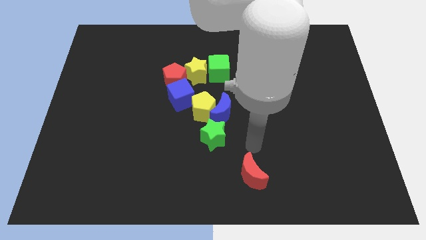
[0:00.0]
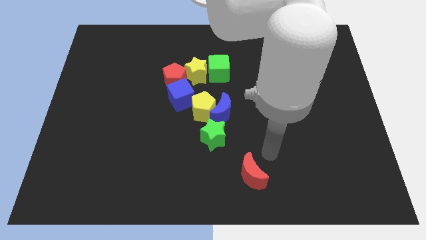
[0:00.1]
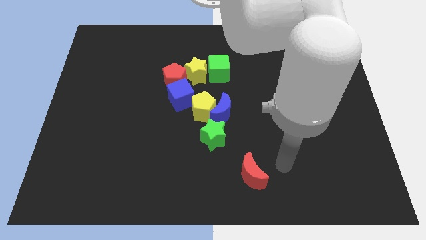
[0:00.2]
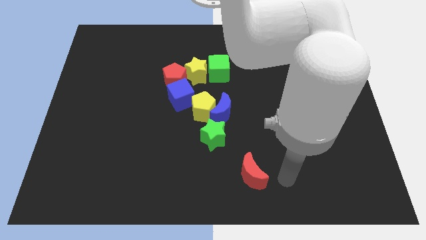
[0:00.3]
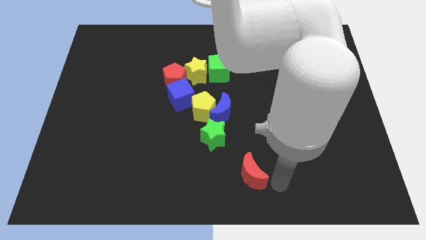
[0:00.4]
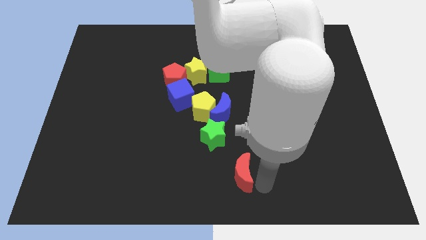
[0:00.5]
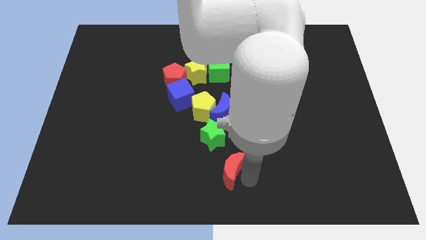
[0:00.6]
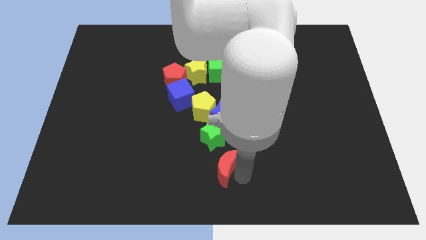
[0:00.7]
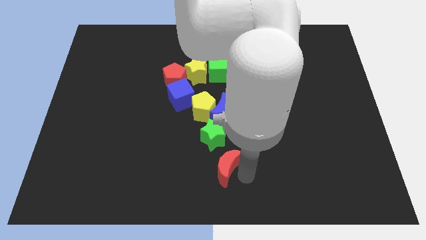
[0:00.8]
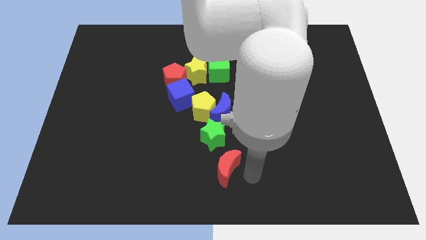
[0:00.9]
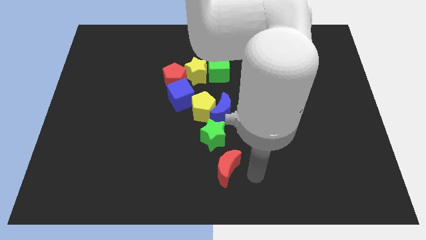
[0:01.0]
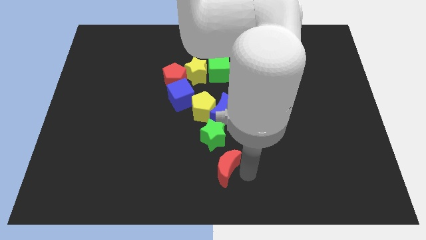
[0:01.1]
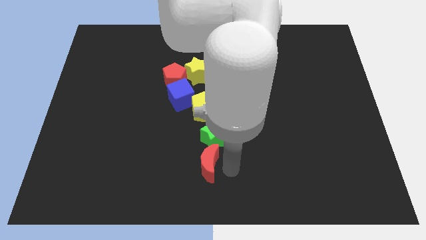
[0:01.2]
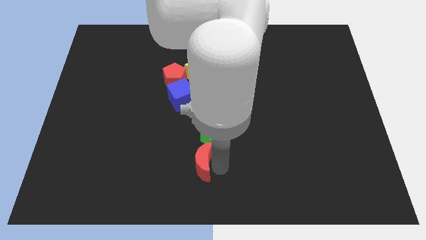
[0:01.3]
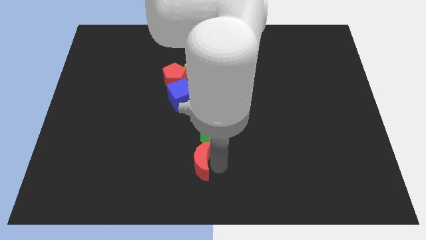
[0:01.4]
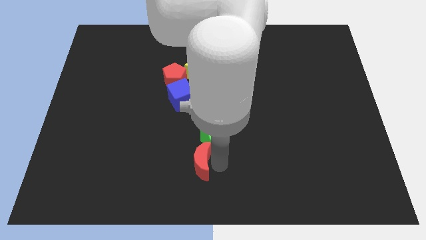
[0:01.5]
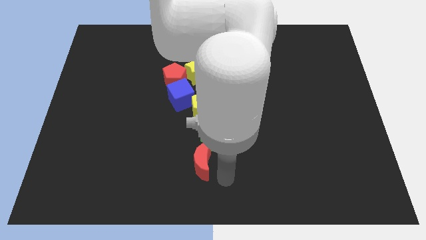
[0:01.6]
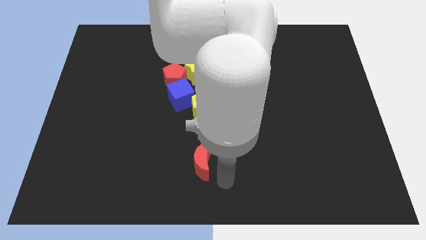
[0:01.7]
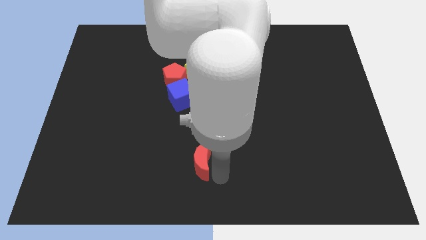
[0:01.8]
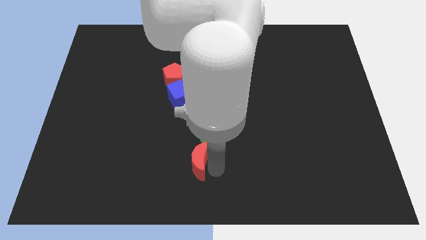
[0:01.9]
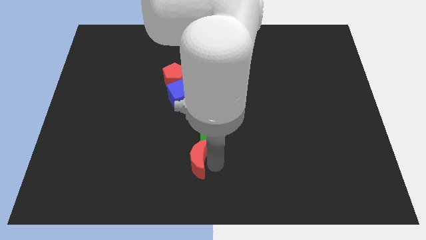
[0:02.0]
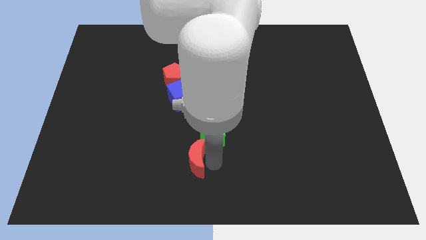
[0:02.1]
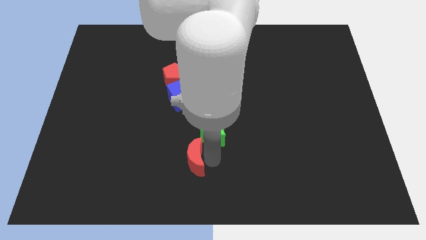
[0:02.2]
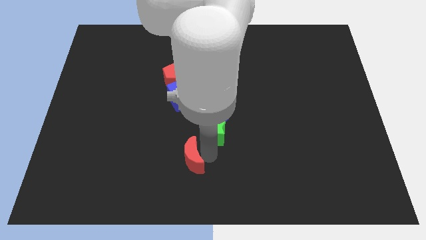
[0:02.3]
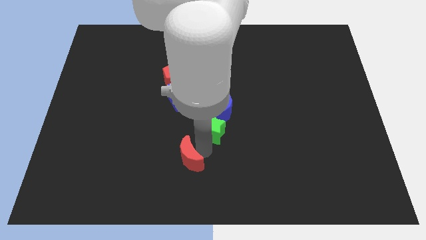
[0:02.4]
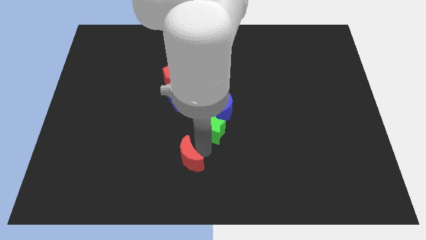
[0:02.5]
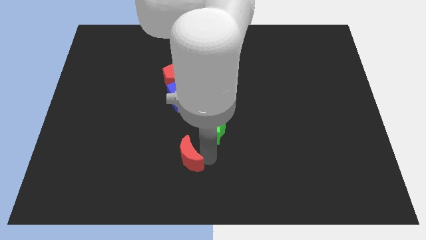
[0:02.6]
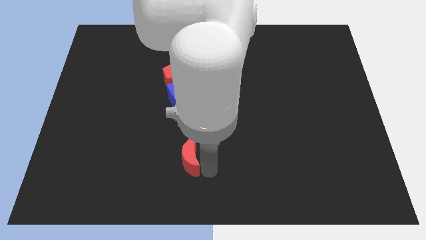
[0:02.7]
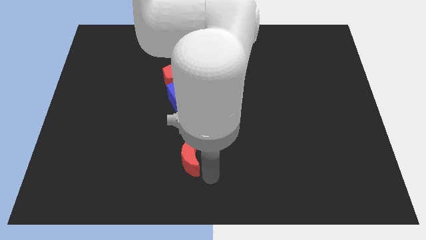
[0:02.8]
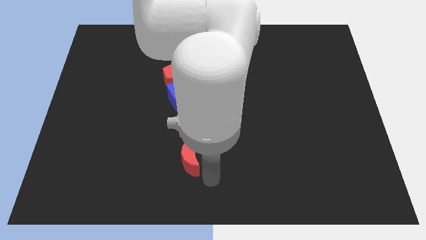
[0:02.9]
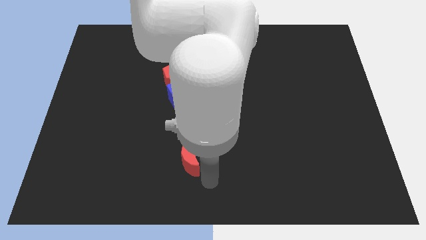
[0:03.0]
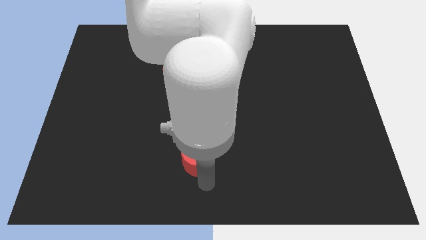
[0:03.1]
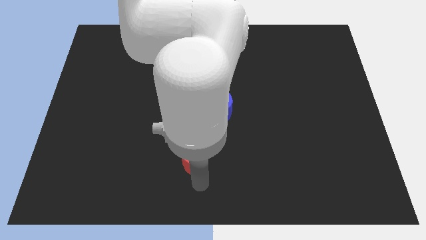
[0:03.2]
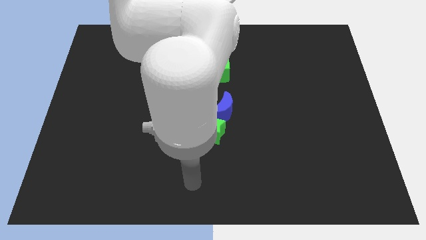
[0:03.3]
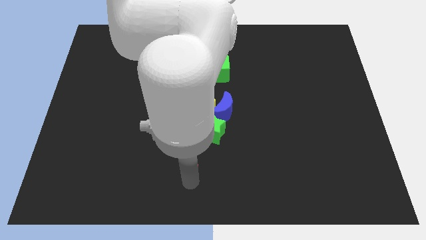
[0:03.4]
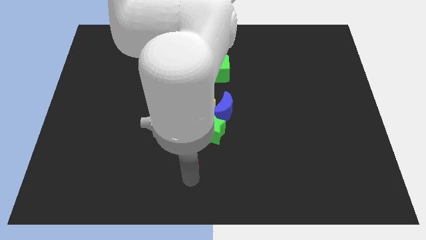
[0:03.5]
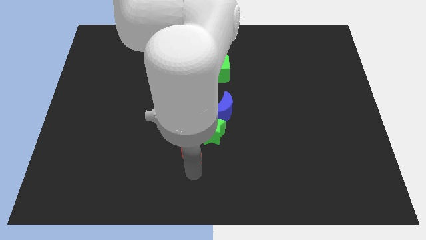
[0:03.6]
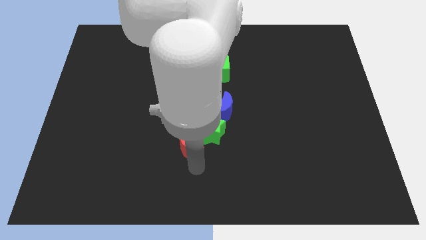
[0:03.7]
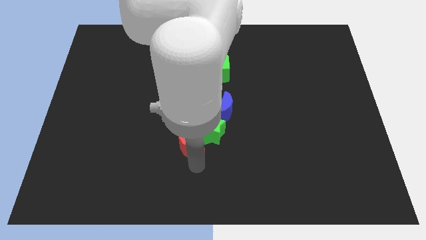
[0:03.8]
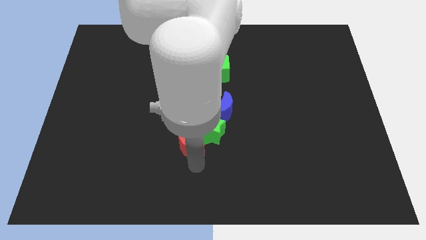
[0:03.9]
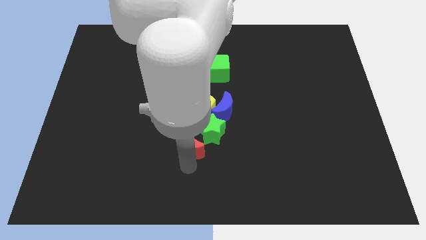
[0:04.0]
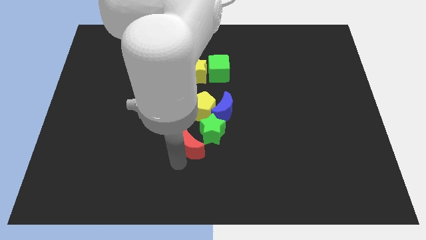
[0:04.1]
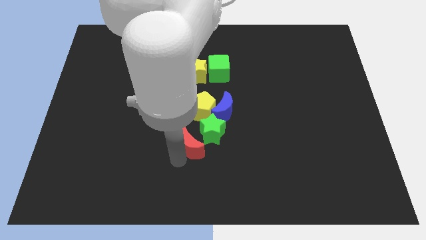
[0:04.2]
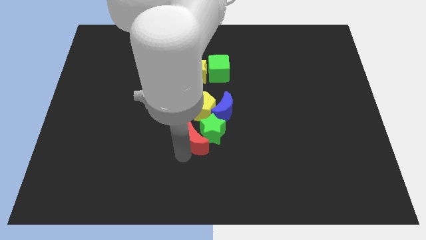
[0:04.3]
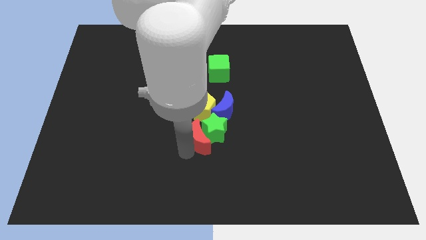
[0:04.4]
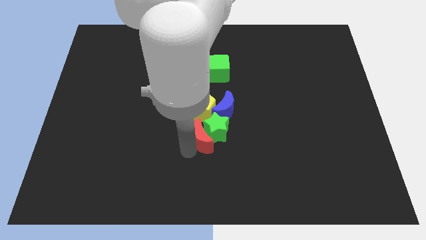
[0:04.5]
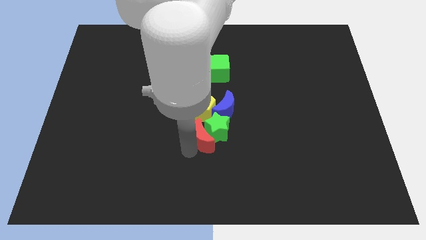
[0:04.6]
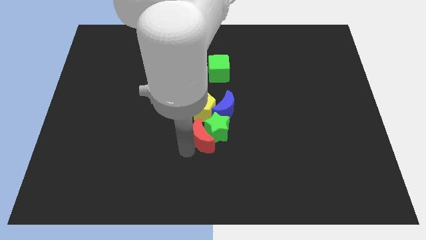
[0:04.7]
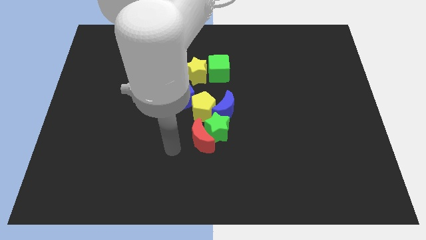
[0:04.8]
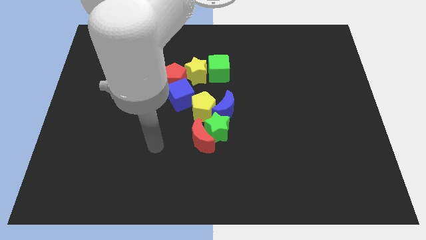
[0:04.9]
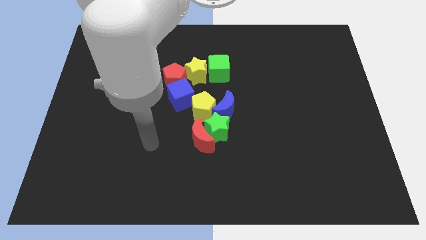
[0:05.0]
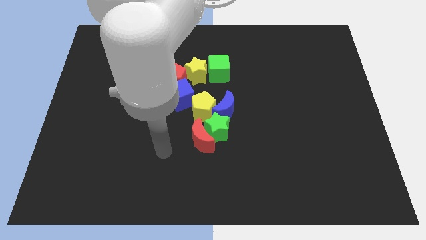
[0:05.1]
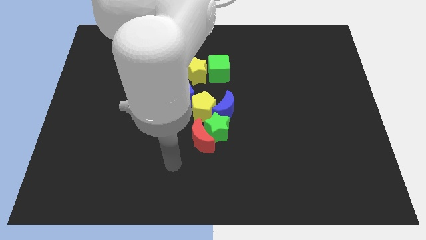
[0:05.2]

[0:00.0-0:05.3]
put the red moon at the left of the green star

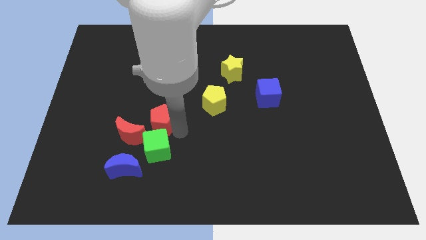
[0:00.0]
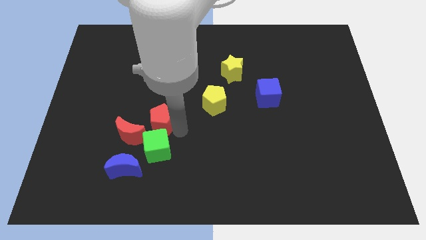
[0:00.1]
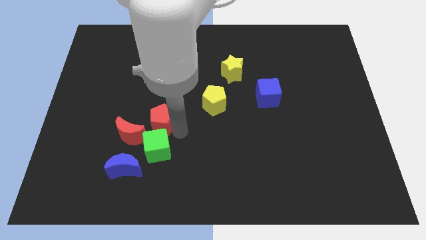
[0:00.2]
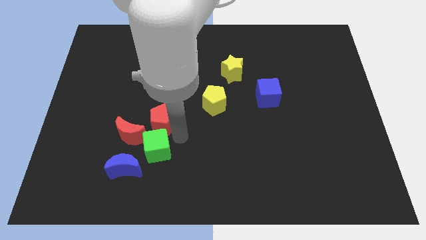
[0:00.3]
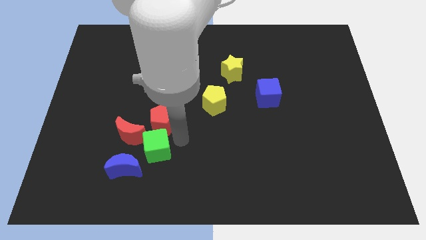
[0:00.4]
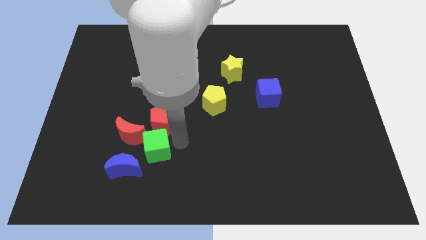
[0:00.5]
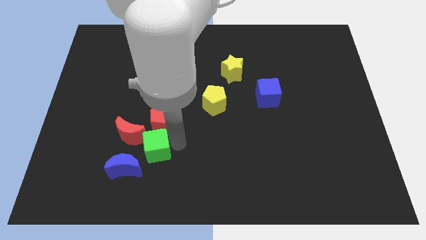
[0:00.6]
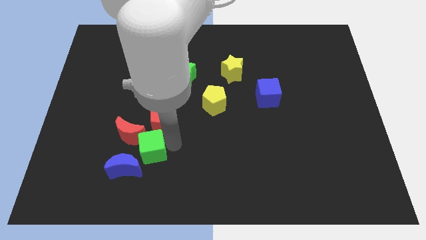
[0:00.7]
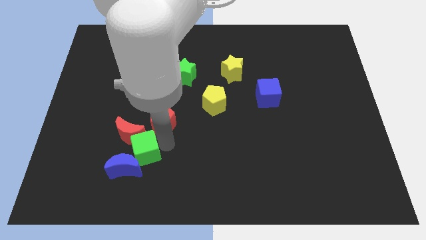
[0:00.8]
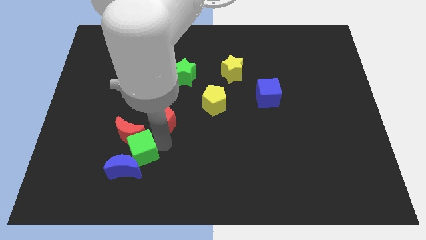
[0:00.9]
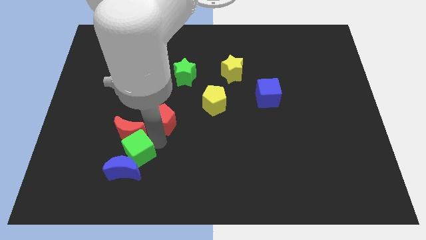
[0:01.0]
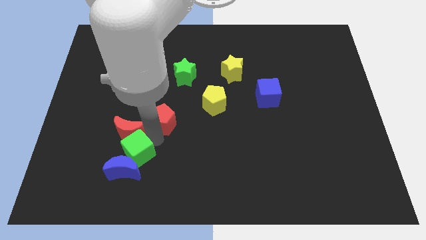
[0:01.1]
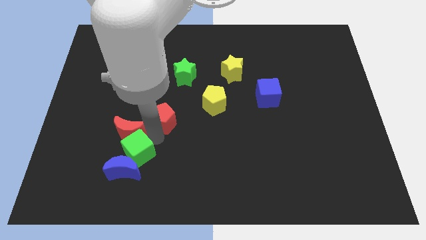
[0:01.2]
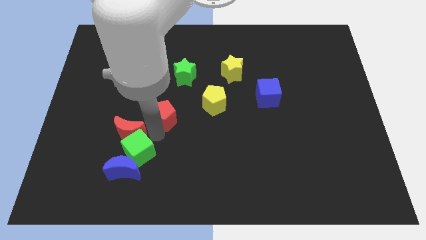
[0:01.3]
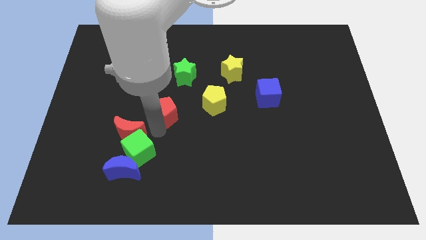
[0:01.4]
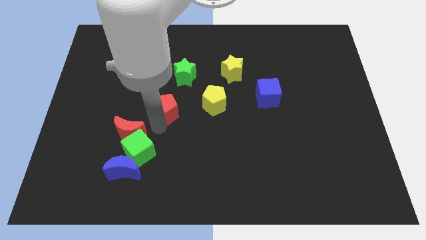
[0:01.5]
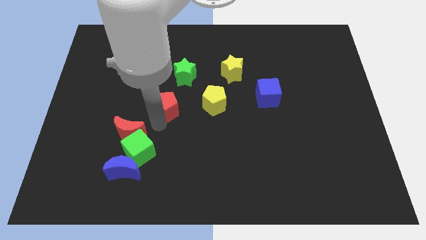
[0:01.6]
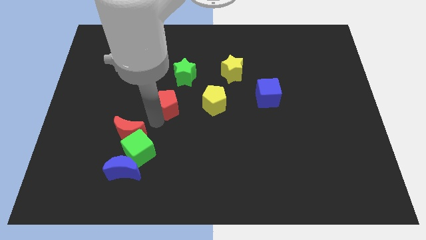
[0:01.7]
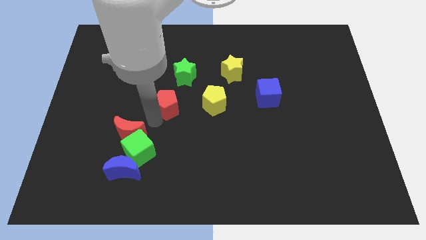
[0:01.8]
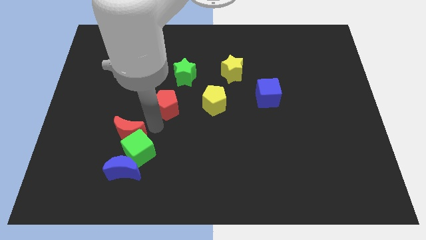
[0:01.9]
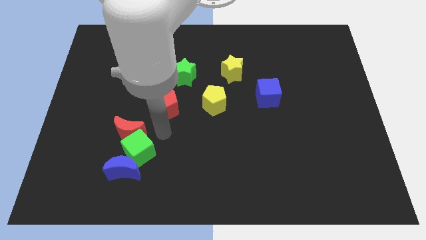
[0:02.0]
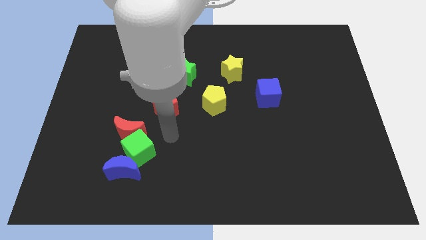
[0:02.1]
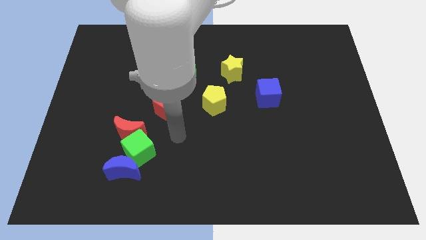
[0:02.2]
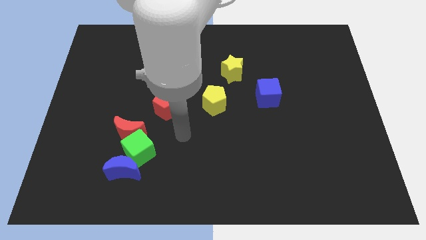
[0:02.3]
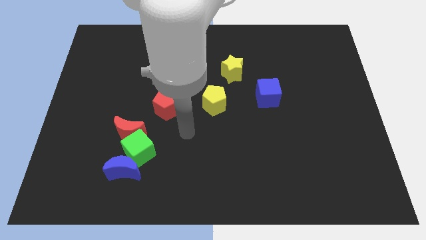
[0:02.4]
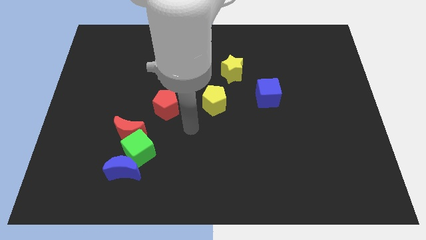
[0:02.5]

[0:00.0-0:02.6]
move the red pentagon up slightly

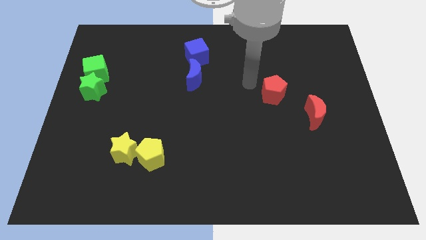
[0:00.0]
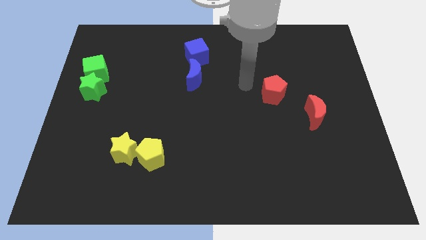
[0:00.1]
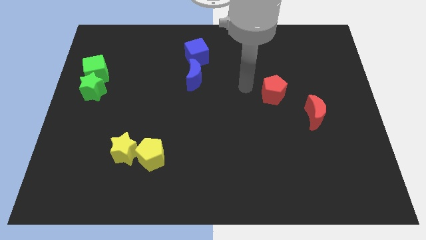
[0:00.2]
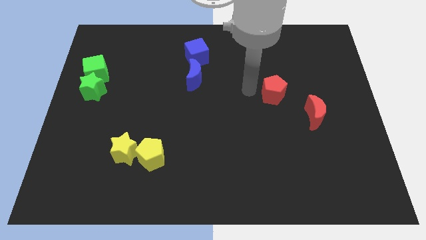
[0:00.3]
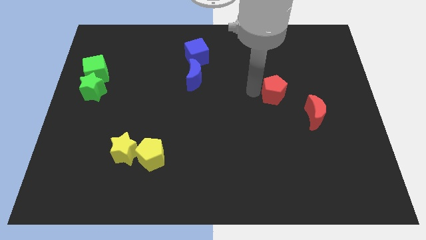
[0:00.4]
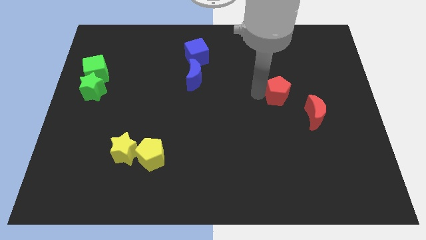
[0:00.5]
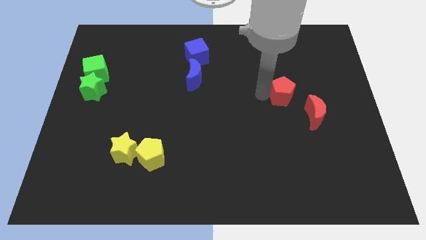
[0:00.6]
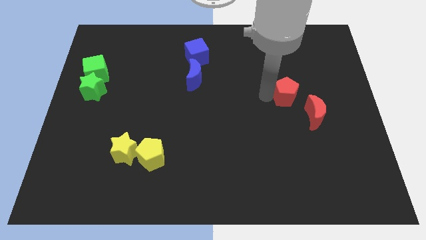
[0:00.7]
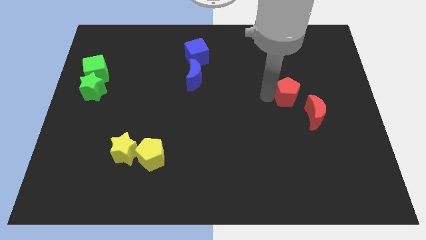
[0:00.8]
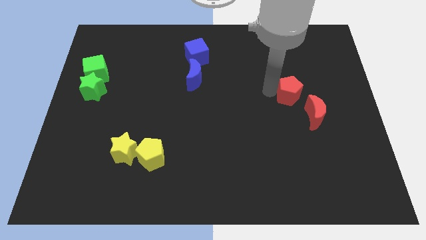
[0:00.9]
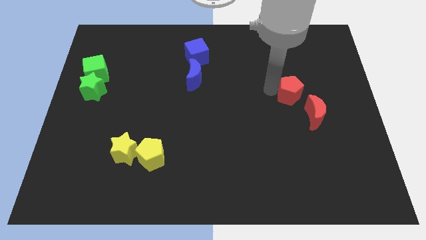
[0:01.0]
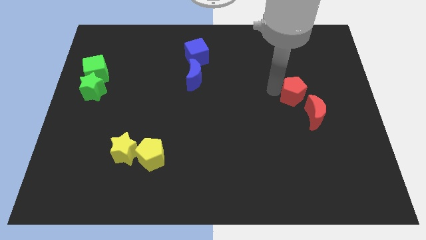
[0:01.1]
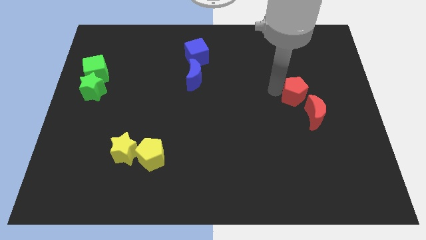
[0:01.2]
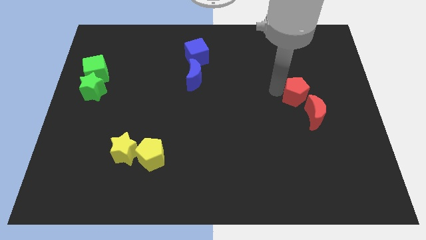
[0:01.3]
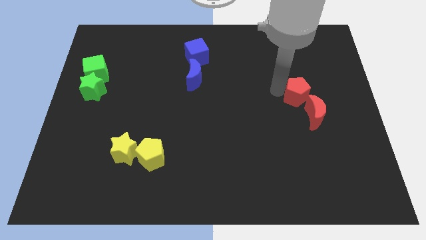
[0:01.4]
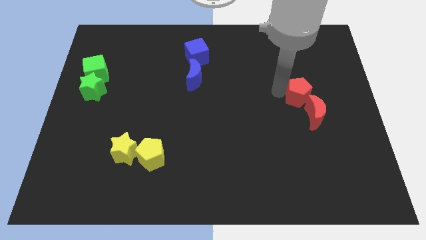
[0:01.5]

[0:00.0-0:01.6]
move the red pentagon into the red crescent
